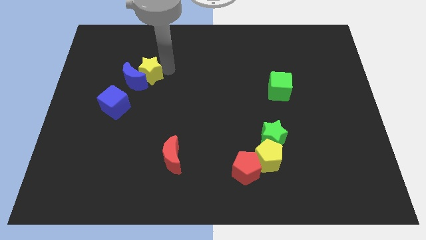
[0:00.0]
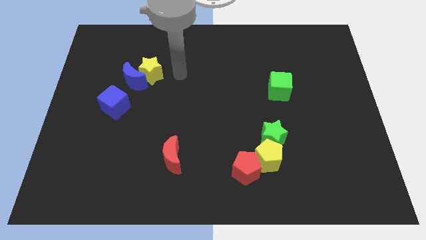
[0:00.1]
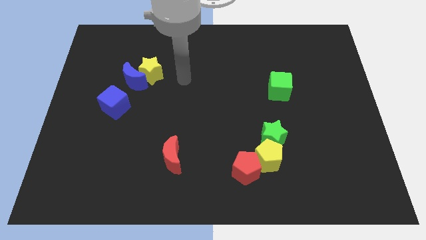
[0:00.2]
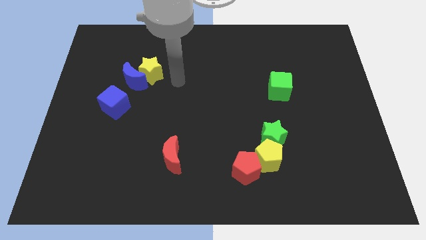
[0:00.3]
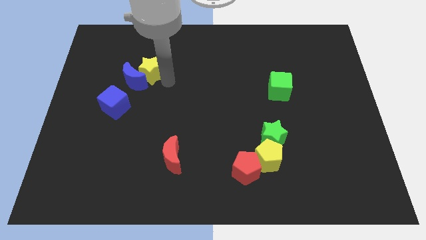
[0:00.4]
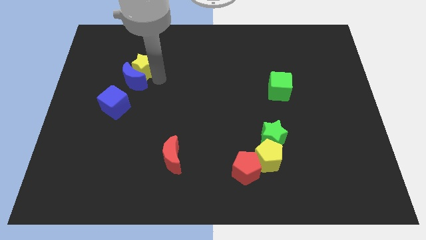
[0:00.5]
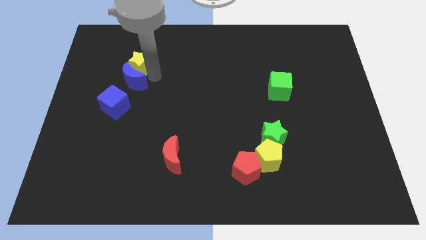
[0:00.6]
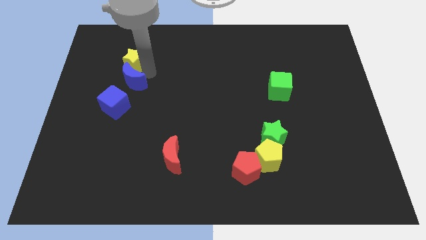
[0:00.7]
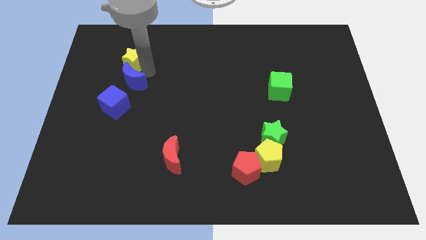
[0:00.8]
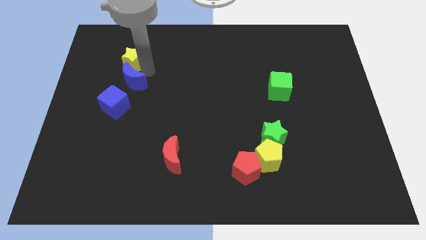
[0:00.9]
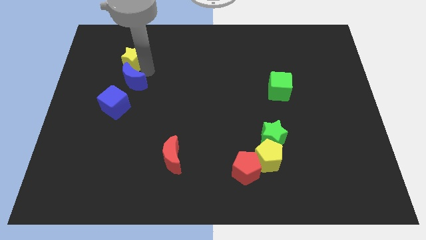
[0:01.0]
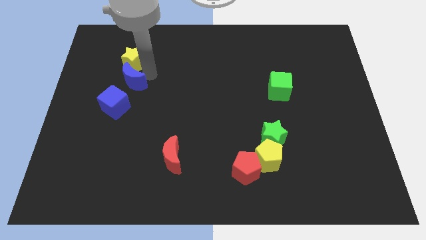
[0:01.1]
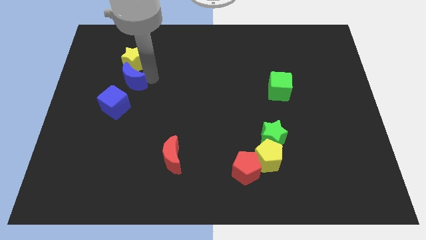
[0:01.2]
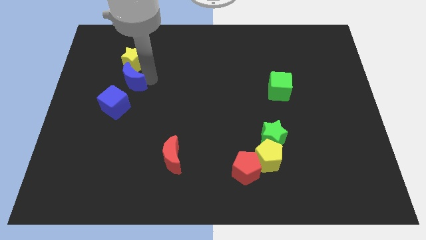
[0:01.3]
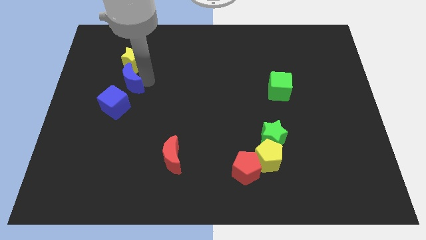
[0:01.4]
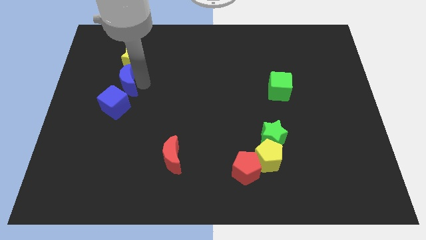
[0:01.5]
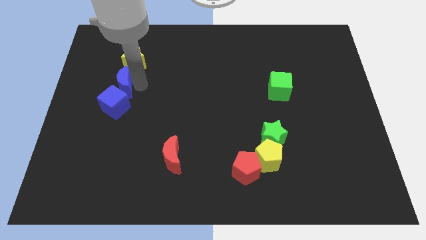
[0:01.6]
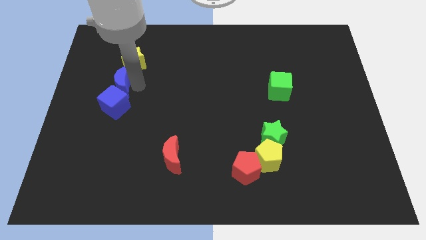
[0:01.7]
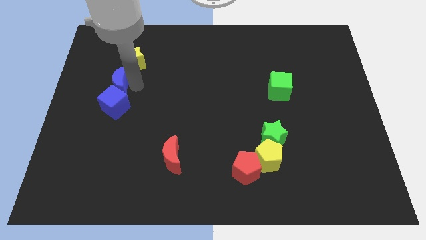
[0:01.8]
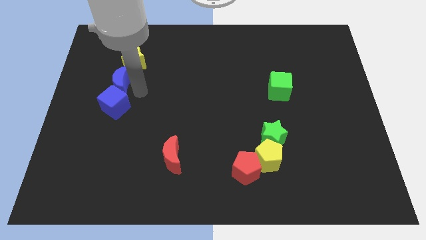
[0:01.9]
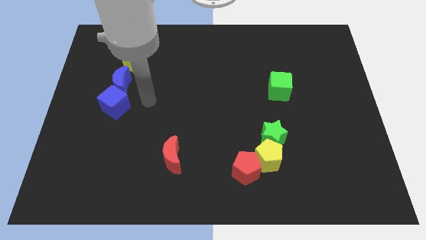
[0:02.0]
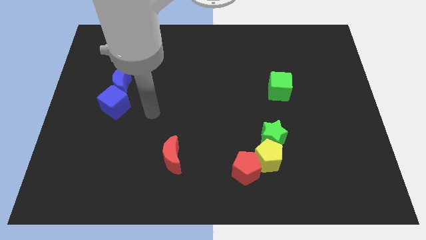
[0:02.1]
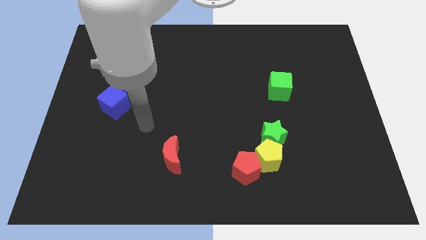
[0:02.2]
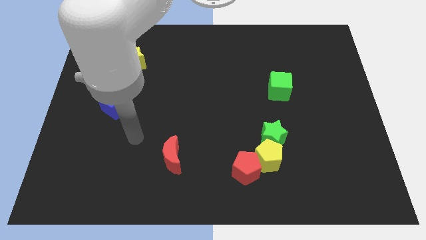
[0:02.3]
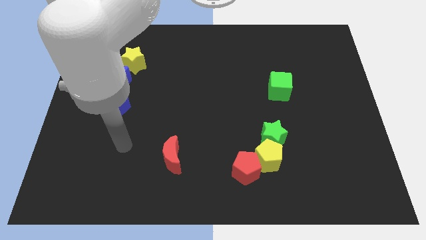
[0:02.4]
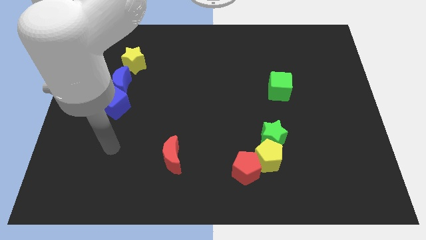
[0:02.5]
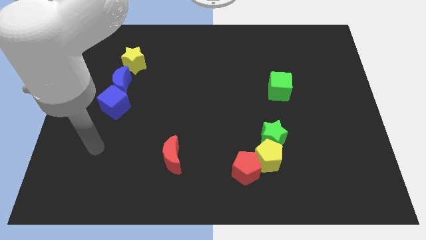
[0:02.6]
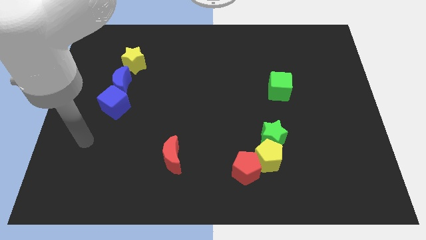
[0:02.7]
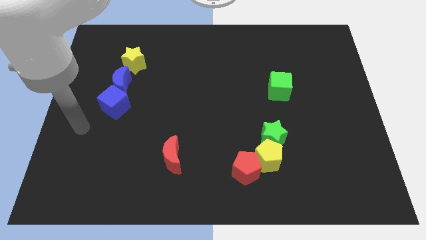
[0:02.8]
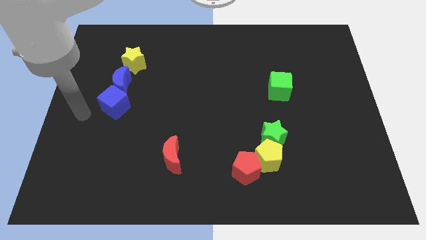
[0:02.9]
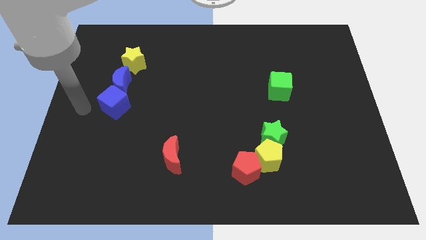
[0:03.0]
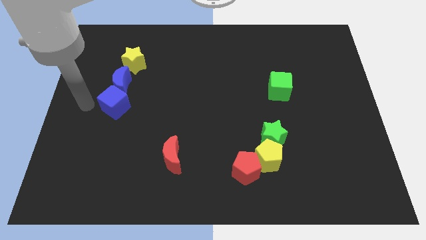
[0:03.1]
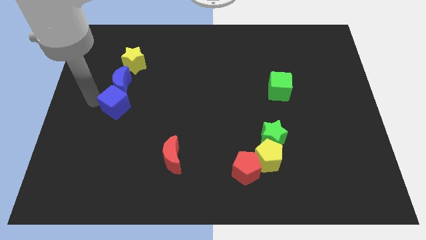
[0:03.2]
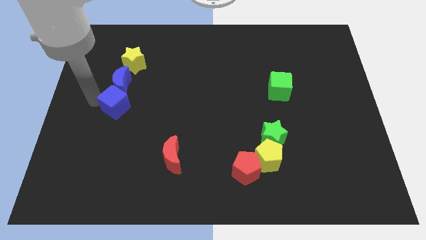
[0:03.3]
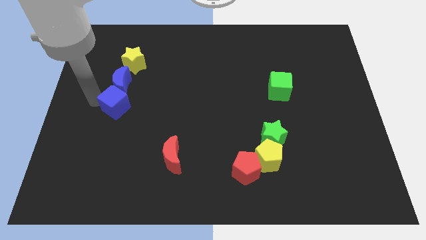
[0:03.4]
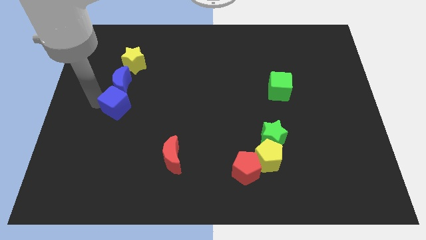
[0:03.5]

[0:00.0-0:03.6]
place blue moon in between blue cube and yellow star

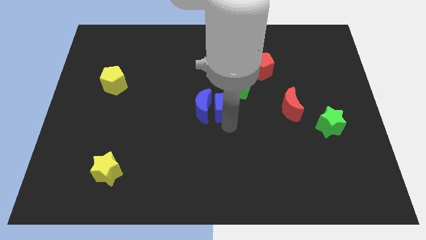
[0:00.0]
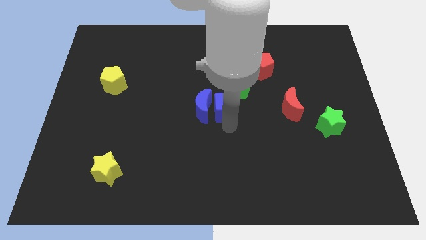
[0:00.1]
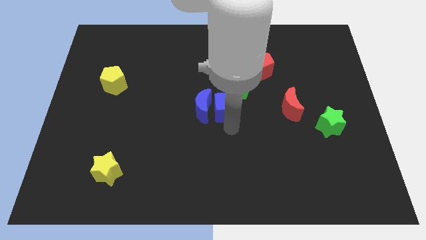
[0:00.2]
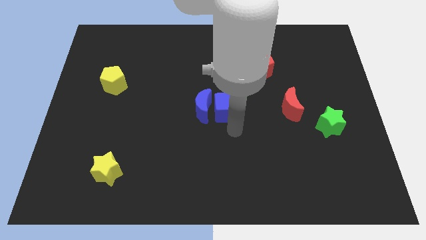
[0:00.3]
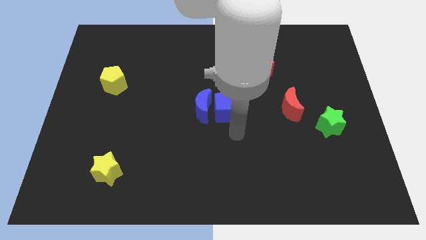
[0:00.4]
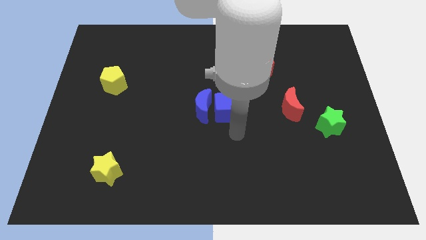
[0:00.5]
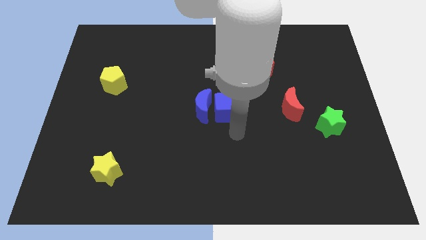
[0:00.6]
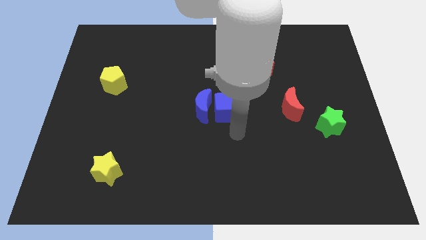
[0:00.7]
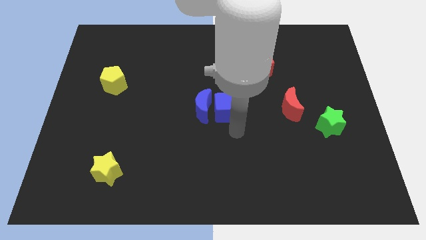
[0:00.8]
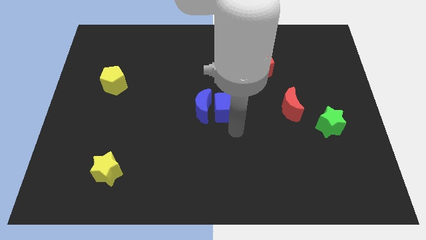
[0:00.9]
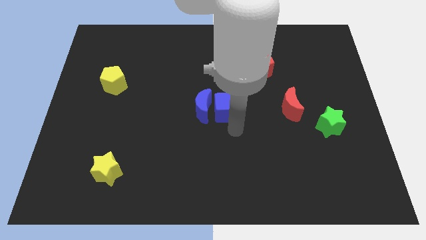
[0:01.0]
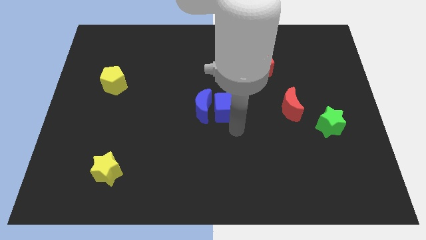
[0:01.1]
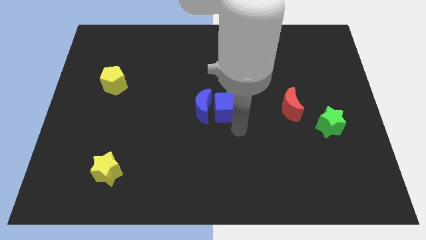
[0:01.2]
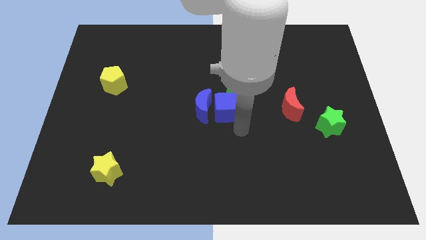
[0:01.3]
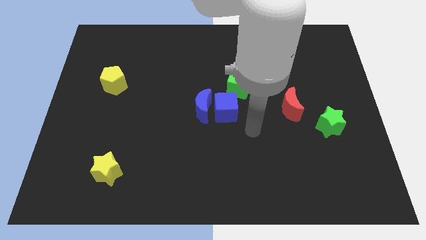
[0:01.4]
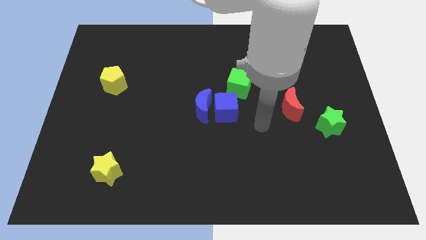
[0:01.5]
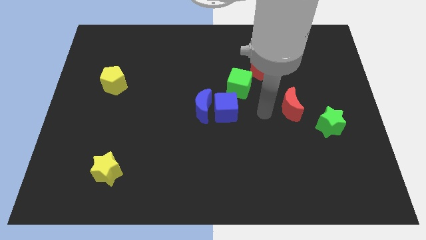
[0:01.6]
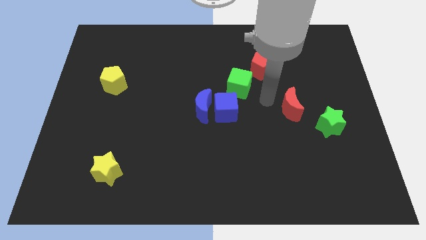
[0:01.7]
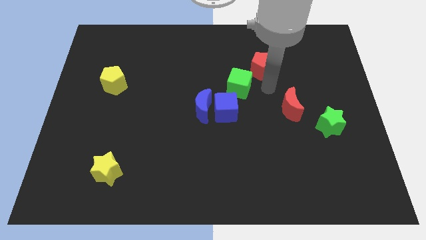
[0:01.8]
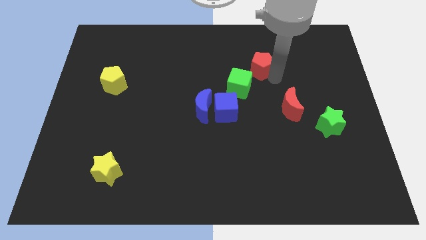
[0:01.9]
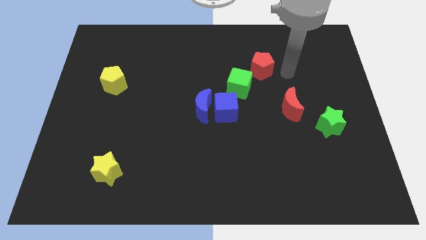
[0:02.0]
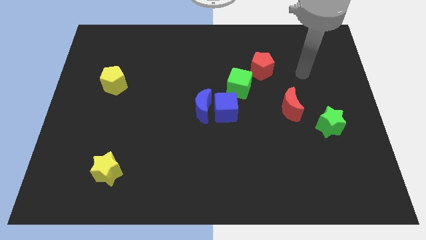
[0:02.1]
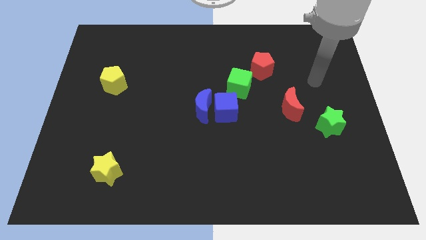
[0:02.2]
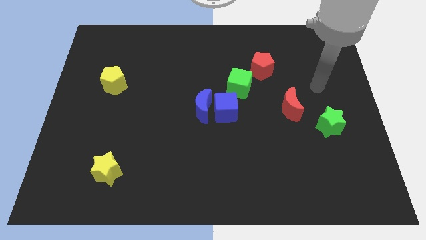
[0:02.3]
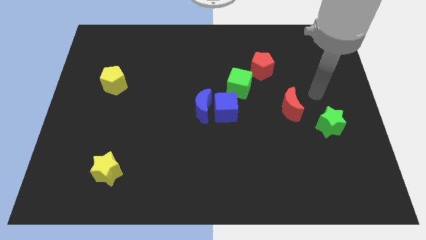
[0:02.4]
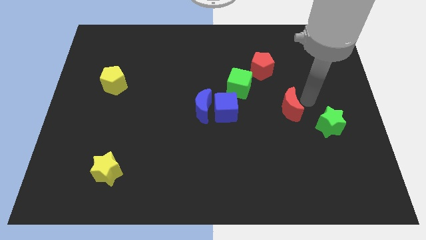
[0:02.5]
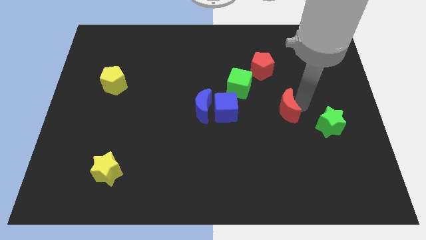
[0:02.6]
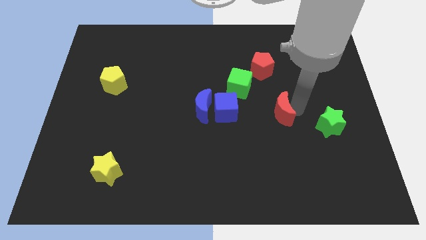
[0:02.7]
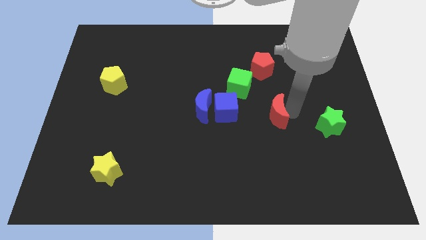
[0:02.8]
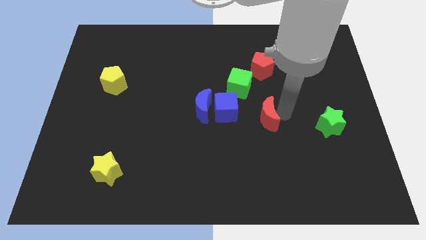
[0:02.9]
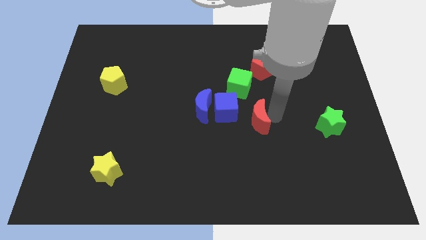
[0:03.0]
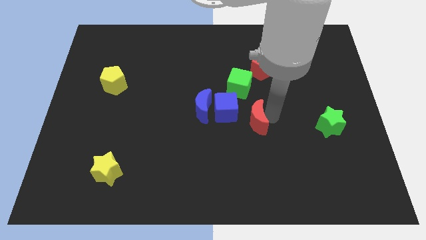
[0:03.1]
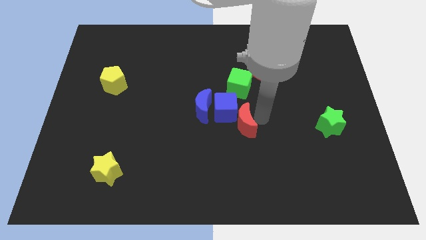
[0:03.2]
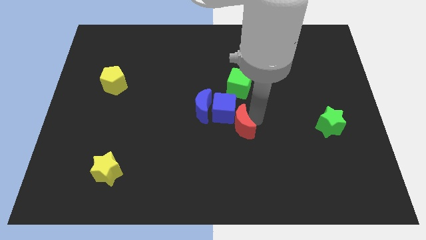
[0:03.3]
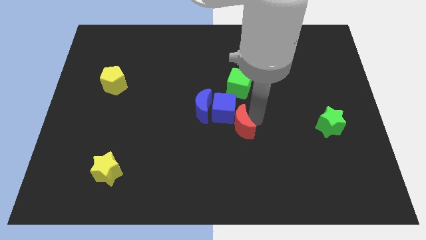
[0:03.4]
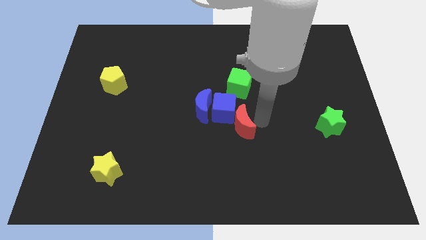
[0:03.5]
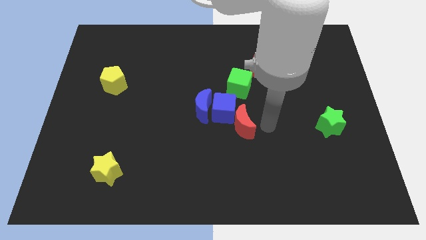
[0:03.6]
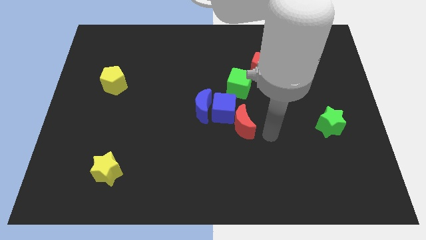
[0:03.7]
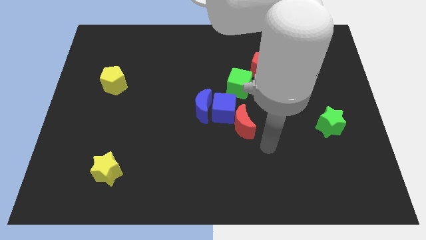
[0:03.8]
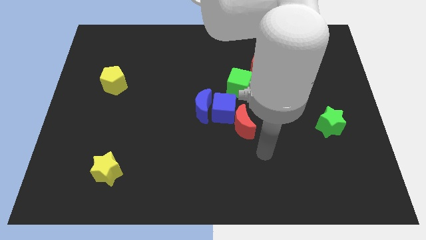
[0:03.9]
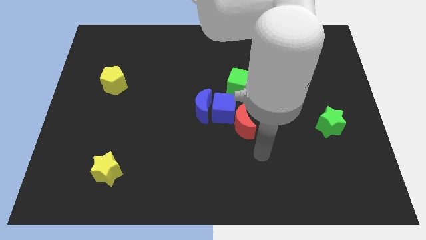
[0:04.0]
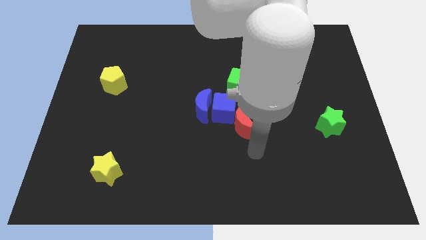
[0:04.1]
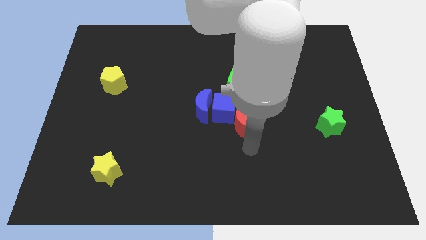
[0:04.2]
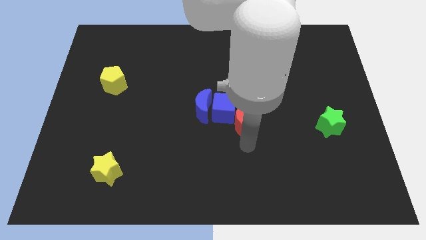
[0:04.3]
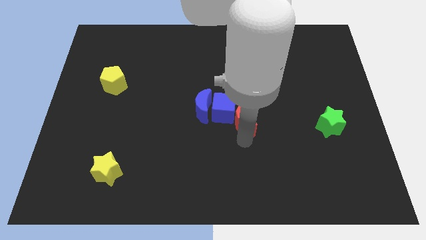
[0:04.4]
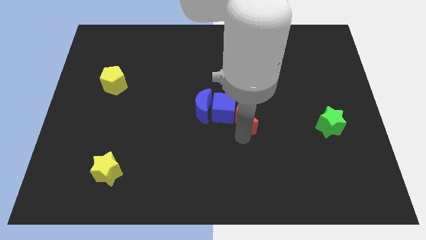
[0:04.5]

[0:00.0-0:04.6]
push the red moon into the blue cube

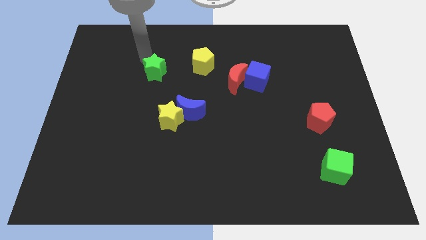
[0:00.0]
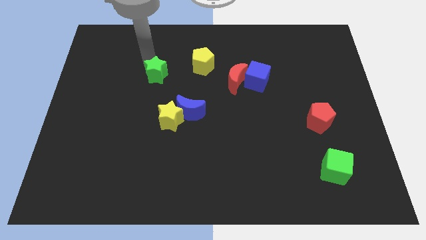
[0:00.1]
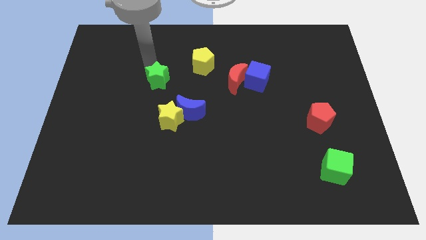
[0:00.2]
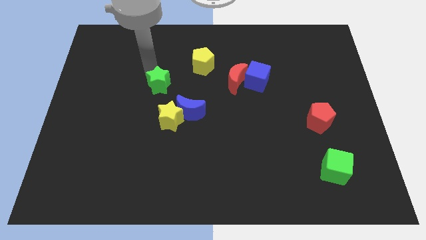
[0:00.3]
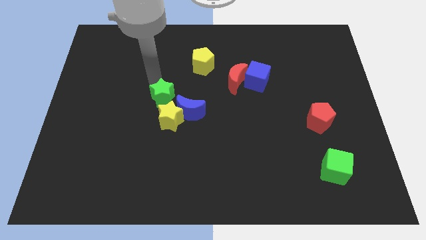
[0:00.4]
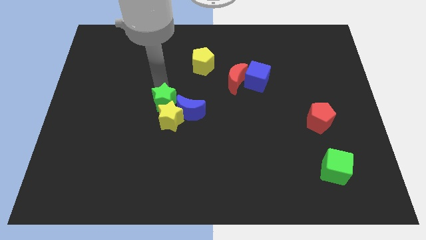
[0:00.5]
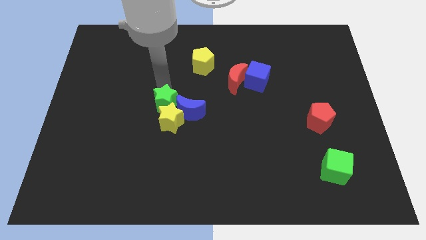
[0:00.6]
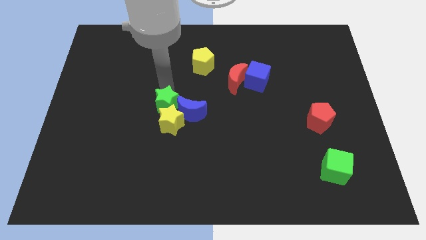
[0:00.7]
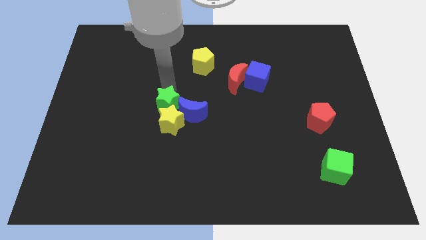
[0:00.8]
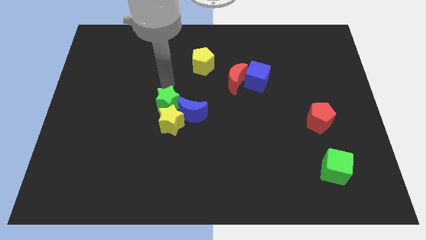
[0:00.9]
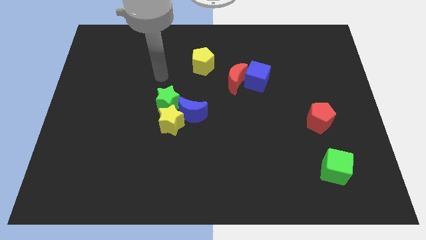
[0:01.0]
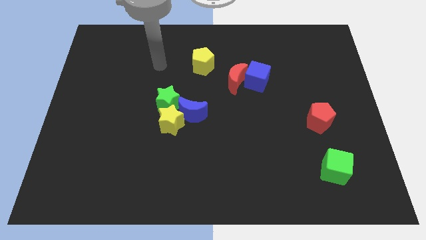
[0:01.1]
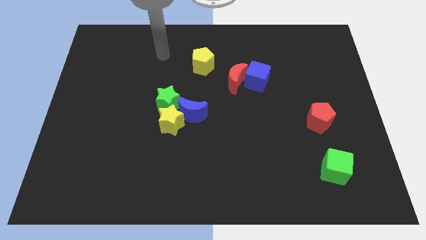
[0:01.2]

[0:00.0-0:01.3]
move green star into the yellow star
